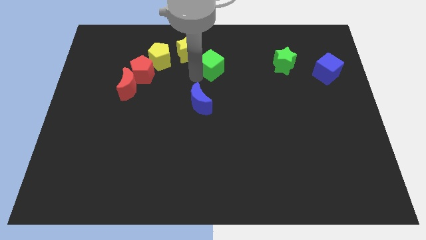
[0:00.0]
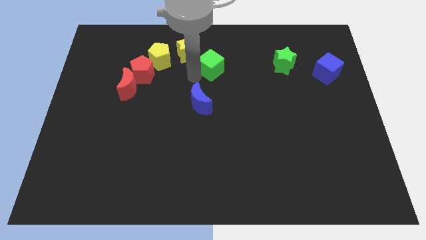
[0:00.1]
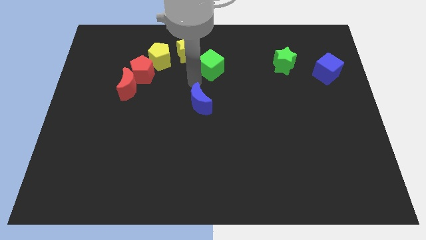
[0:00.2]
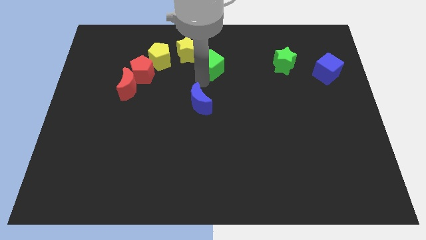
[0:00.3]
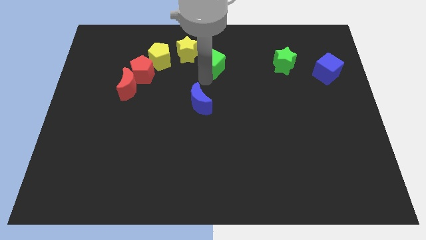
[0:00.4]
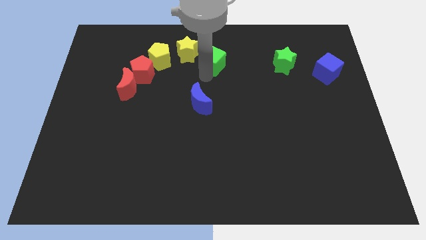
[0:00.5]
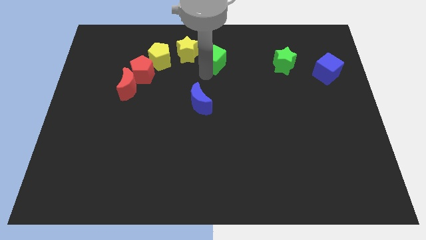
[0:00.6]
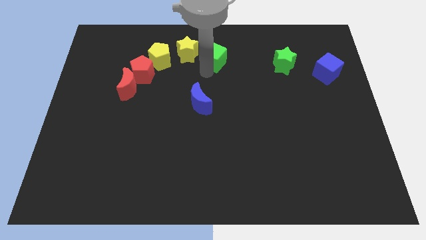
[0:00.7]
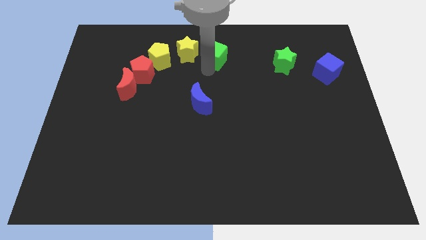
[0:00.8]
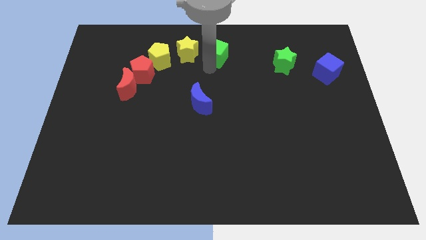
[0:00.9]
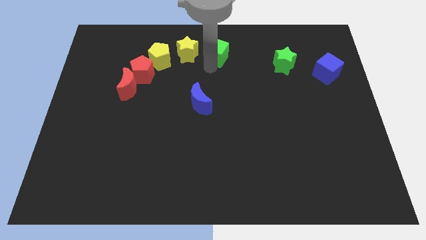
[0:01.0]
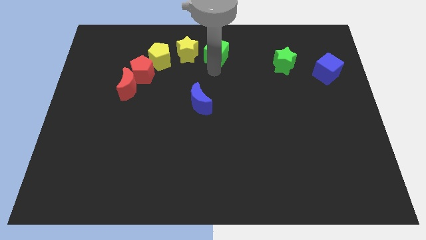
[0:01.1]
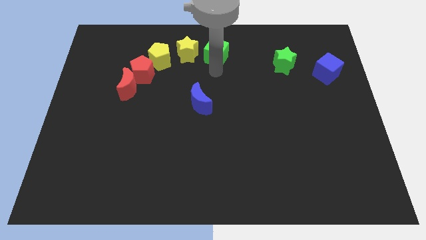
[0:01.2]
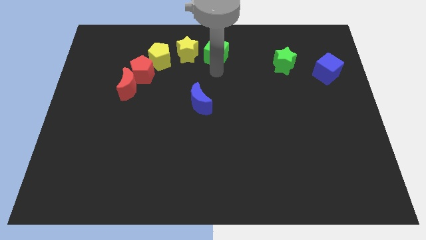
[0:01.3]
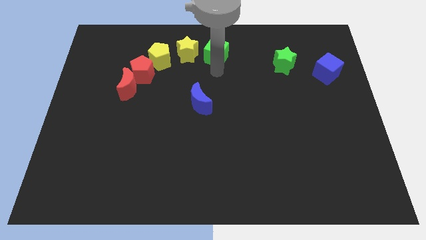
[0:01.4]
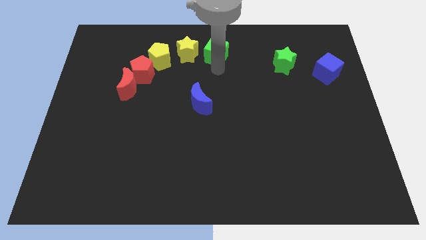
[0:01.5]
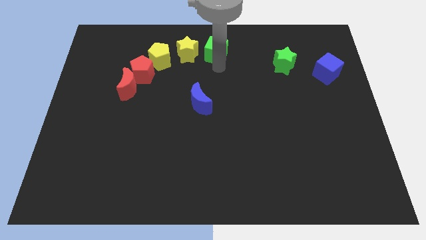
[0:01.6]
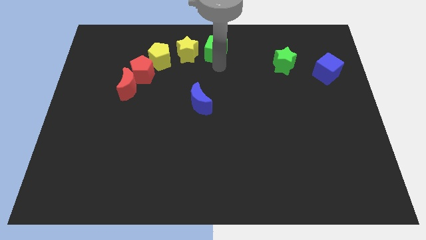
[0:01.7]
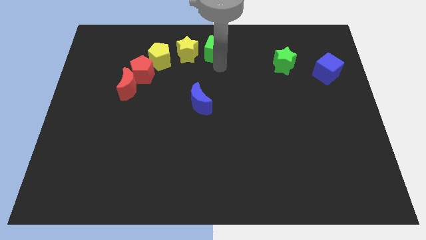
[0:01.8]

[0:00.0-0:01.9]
push the green cube towards the top center

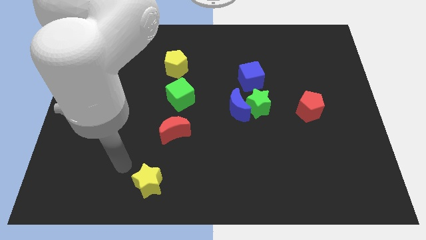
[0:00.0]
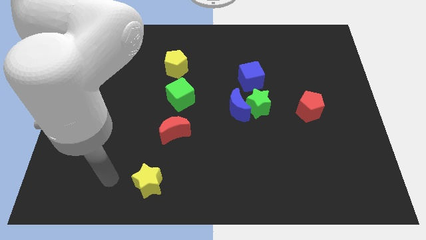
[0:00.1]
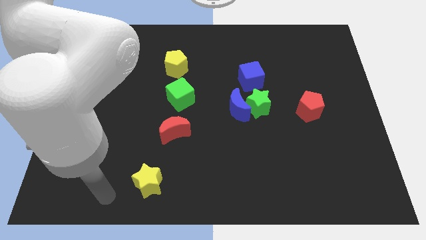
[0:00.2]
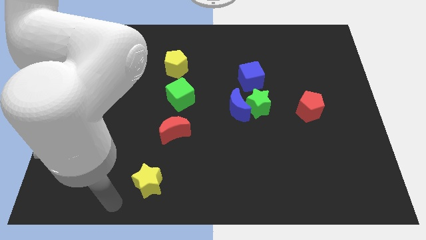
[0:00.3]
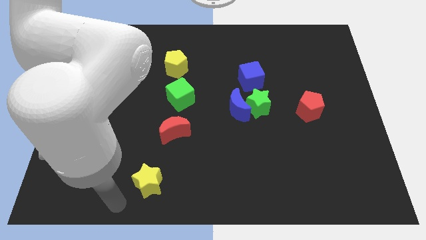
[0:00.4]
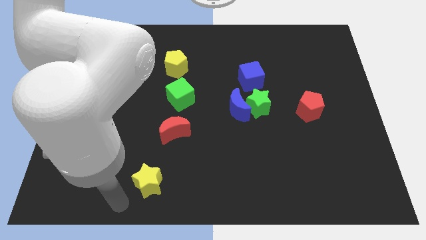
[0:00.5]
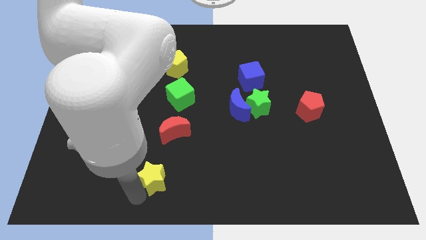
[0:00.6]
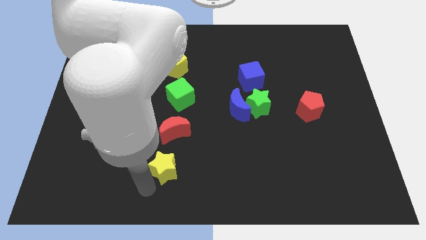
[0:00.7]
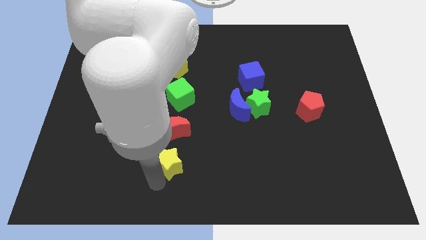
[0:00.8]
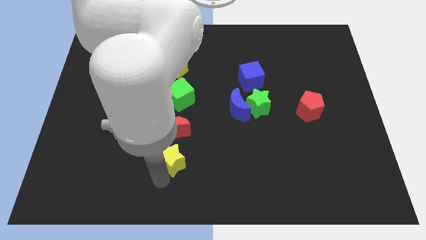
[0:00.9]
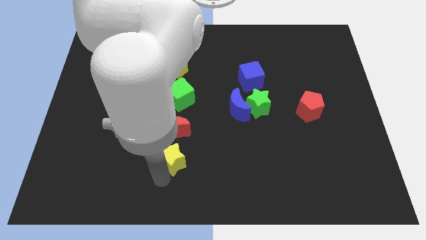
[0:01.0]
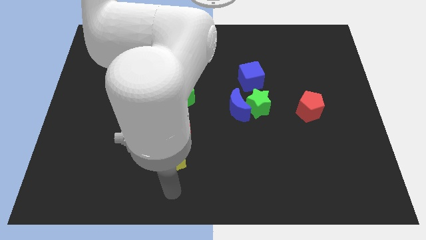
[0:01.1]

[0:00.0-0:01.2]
place yellow star to the bottom of red moon

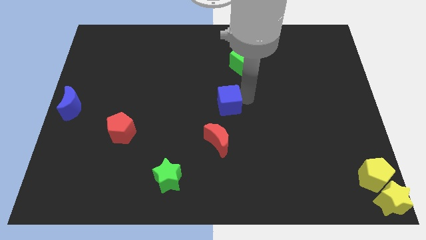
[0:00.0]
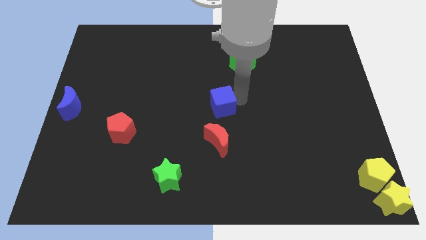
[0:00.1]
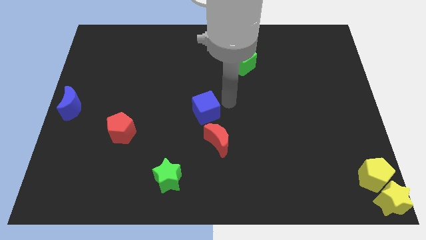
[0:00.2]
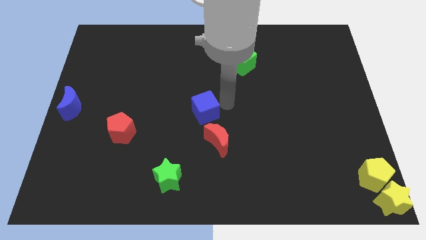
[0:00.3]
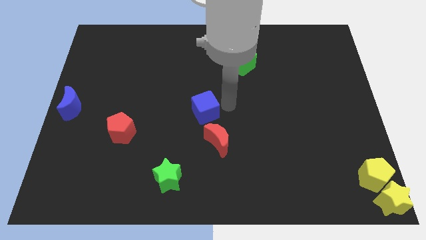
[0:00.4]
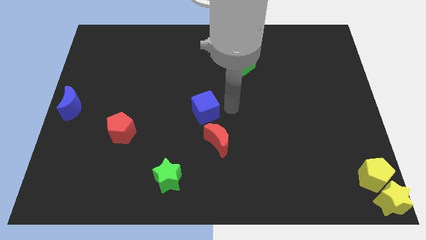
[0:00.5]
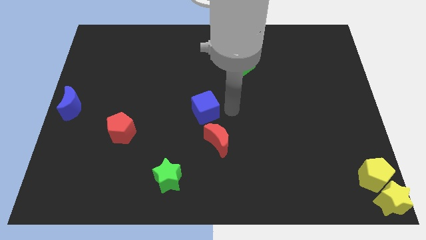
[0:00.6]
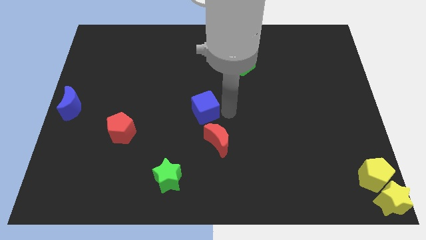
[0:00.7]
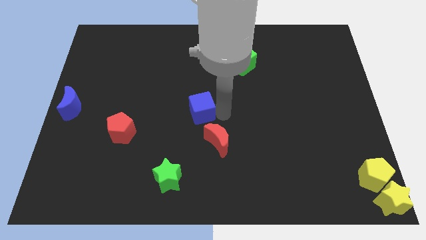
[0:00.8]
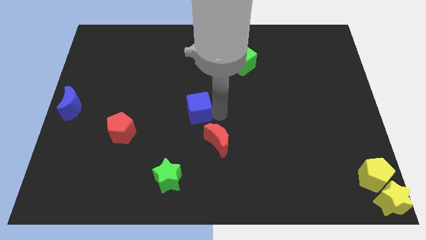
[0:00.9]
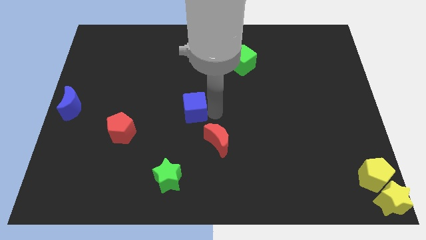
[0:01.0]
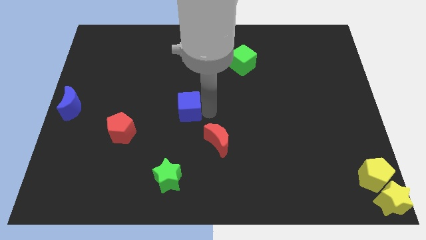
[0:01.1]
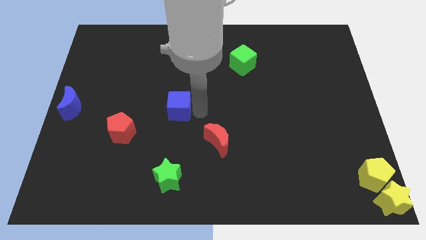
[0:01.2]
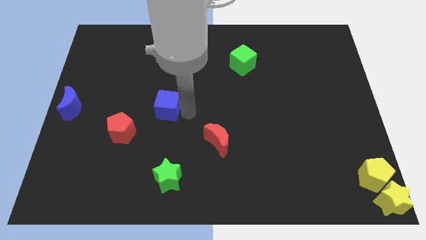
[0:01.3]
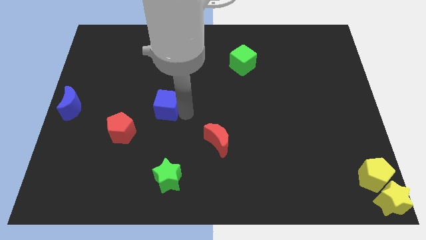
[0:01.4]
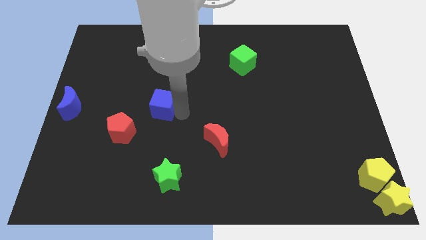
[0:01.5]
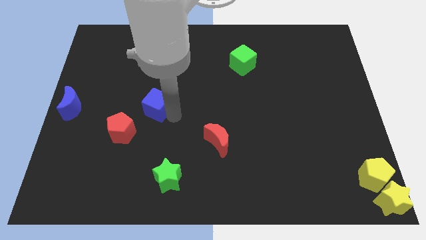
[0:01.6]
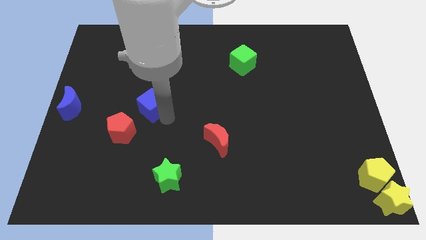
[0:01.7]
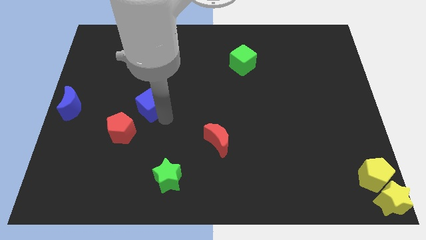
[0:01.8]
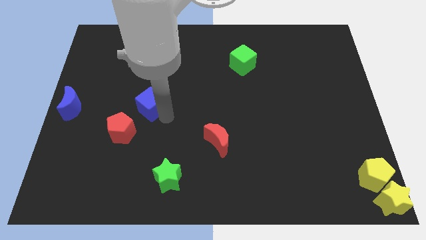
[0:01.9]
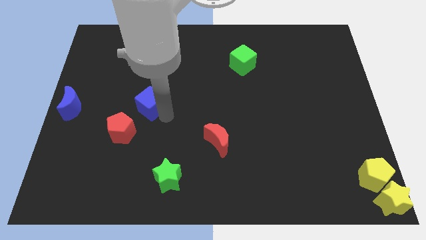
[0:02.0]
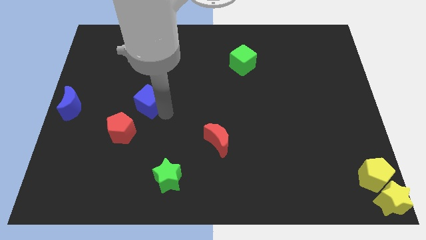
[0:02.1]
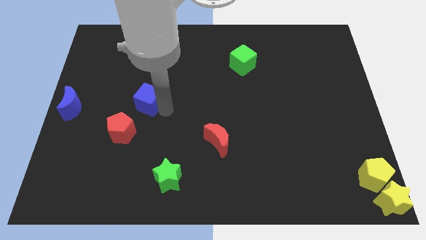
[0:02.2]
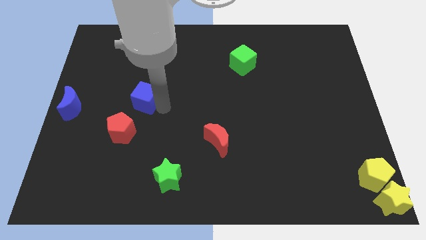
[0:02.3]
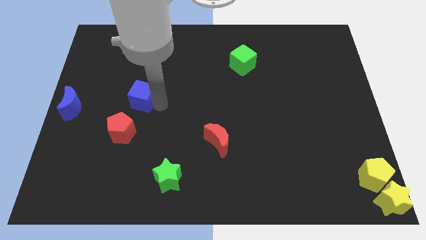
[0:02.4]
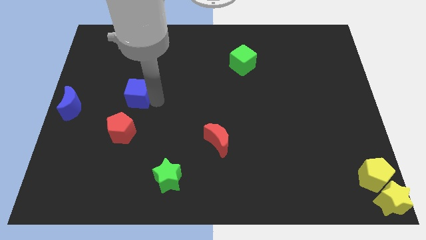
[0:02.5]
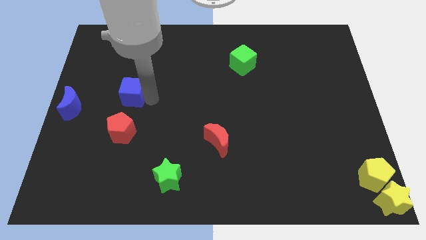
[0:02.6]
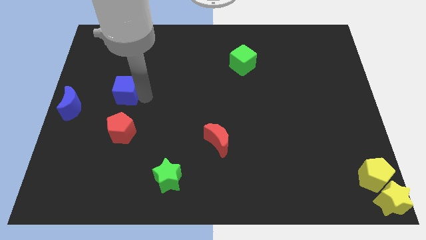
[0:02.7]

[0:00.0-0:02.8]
place the blue cube at the top of red pentagon

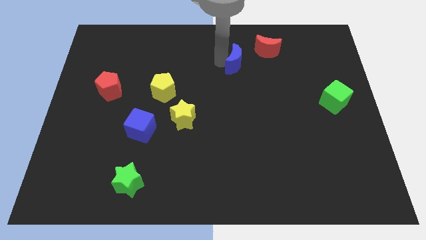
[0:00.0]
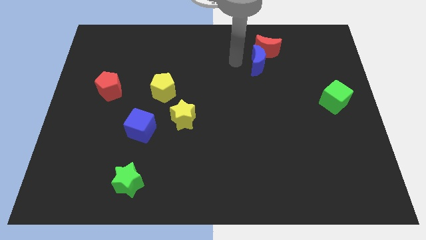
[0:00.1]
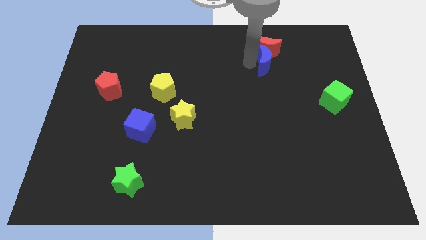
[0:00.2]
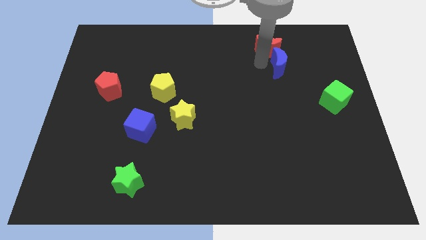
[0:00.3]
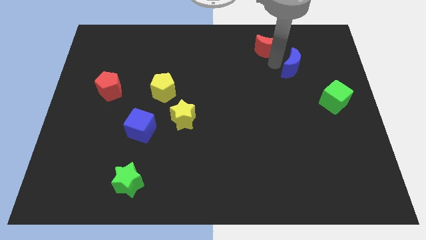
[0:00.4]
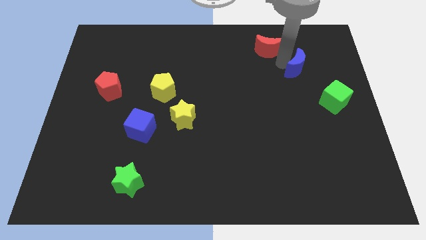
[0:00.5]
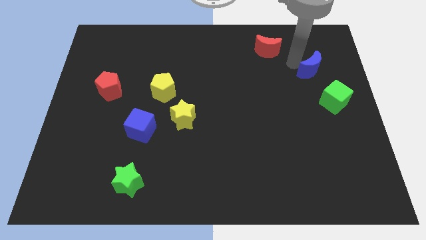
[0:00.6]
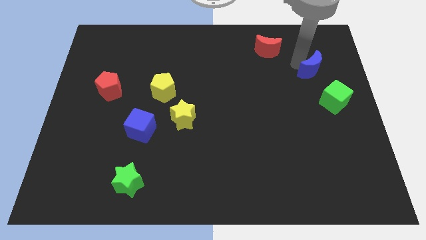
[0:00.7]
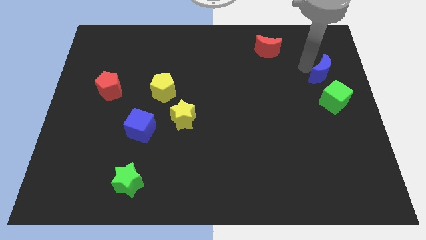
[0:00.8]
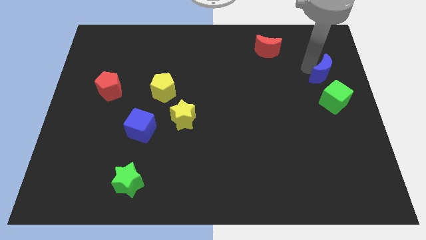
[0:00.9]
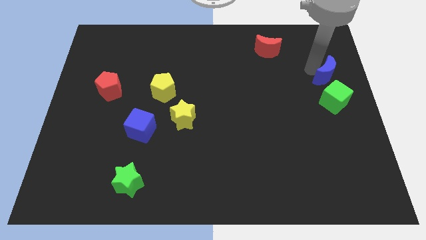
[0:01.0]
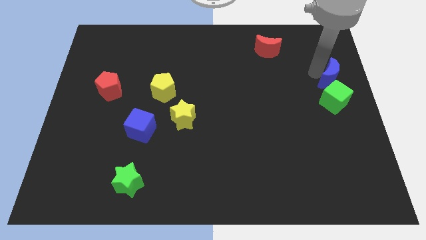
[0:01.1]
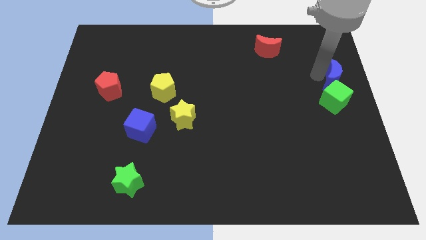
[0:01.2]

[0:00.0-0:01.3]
place blue moon to the top of green cube

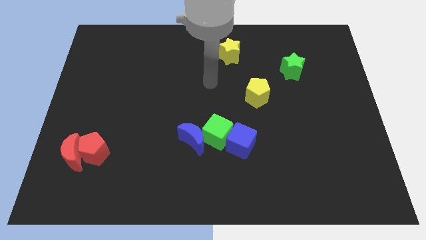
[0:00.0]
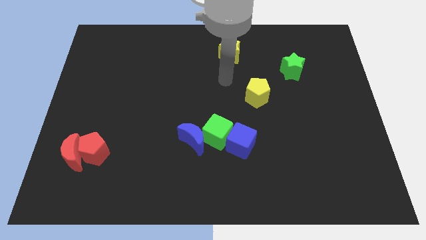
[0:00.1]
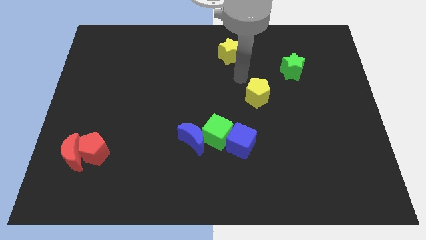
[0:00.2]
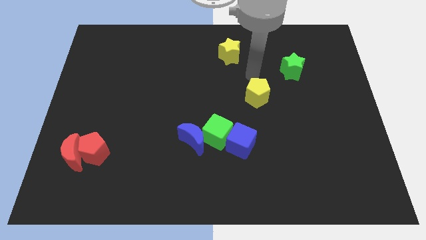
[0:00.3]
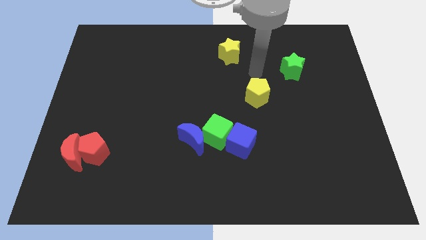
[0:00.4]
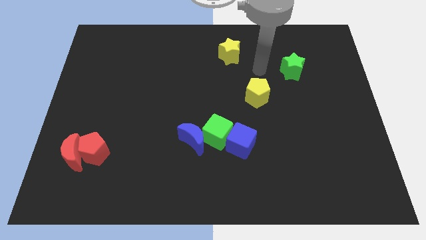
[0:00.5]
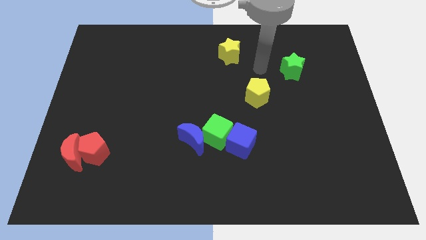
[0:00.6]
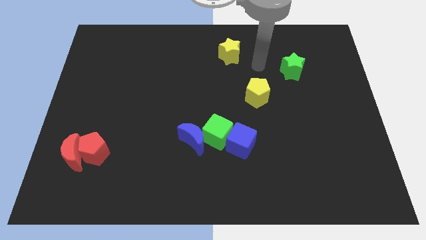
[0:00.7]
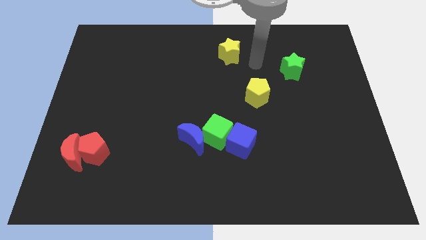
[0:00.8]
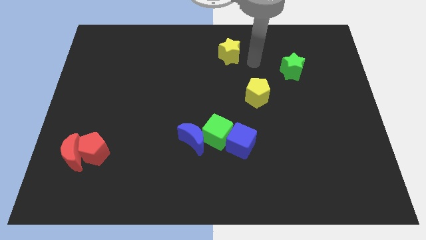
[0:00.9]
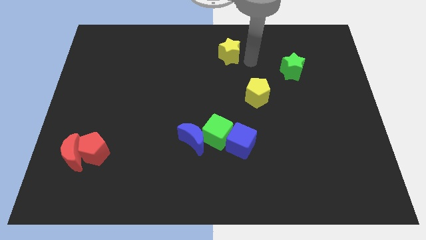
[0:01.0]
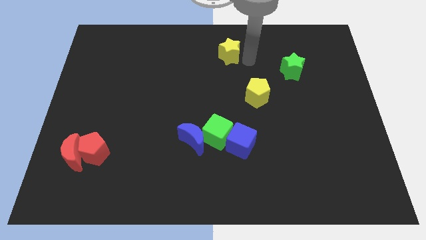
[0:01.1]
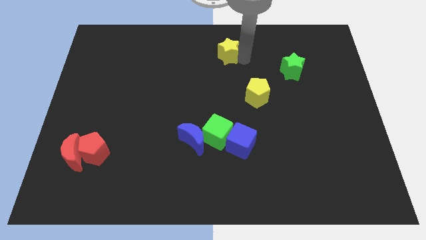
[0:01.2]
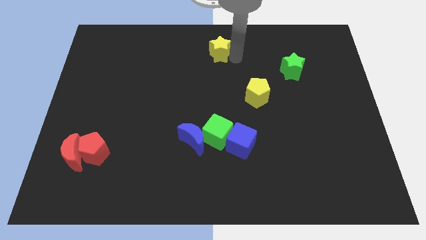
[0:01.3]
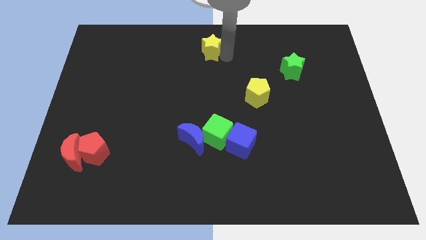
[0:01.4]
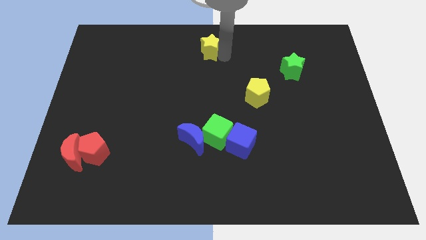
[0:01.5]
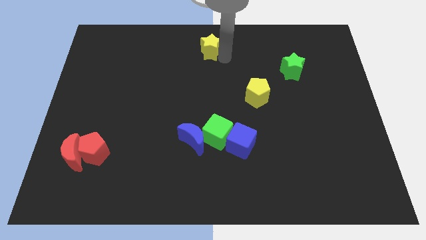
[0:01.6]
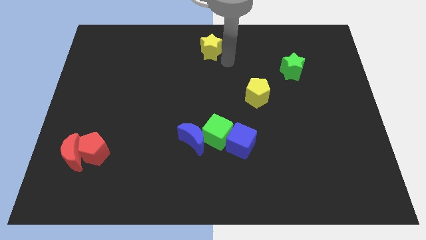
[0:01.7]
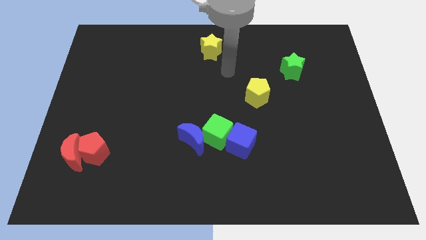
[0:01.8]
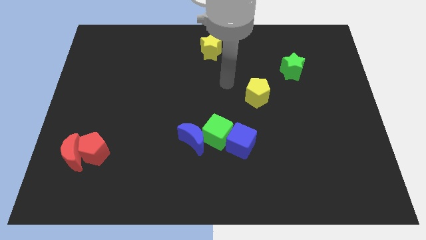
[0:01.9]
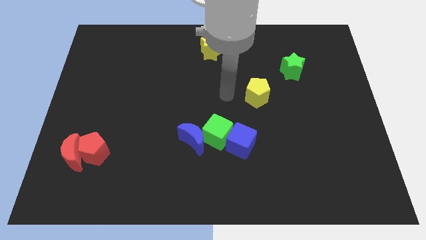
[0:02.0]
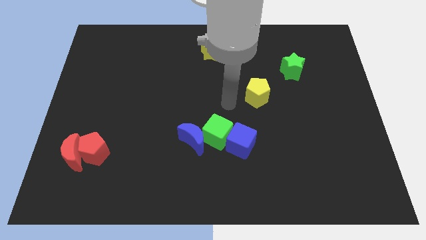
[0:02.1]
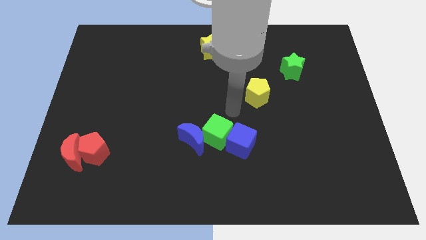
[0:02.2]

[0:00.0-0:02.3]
slightly touch the yellow star
